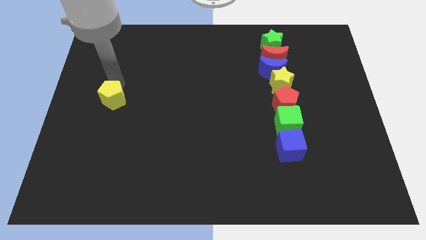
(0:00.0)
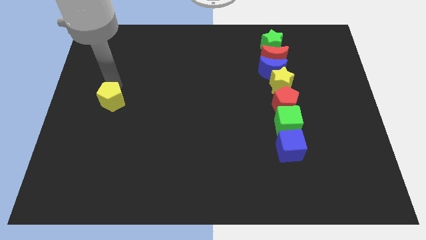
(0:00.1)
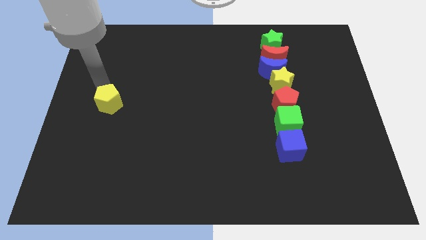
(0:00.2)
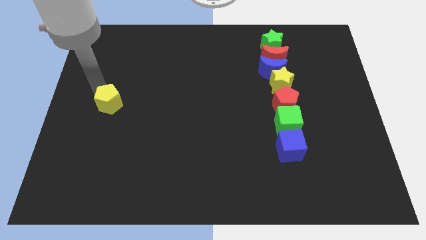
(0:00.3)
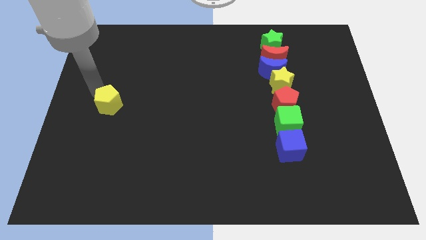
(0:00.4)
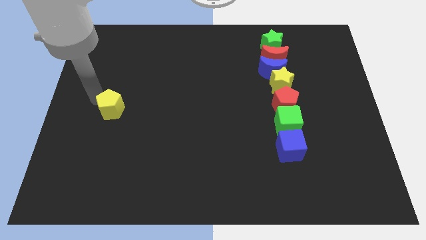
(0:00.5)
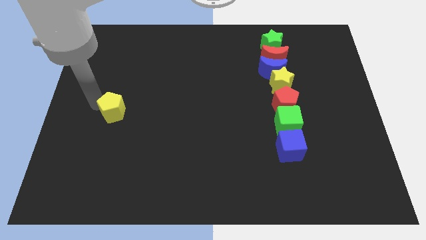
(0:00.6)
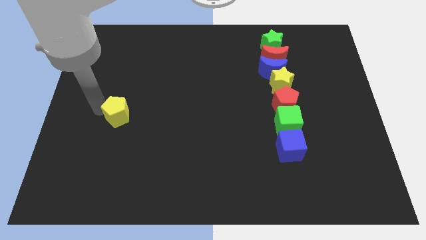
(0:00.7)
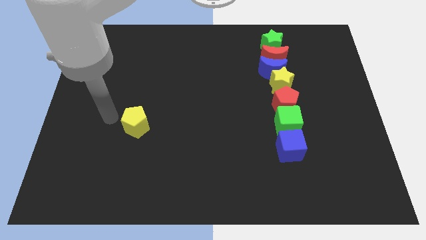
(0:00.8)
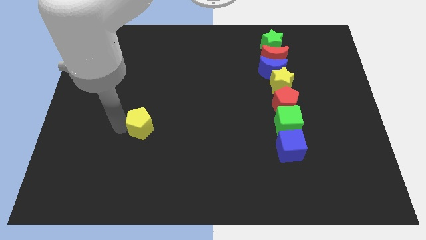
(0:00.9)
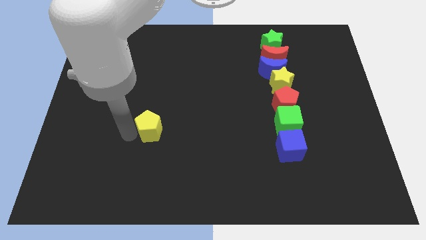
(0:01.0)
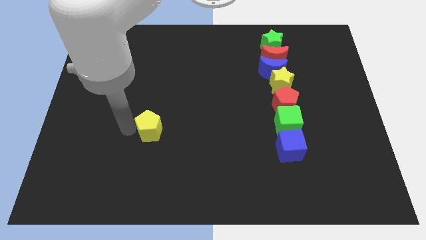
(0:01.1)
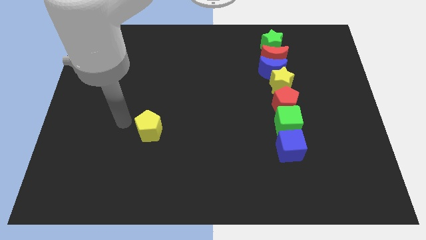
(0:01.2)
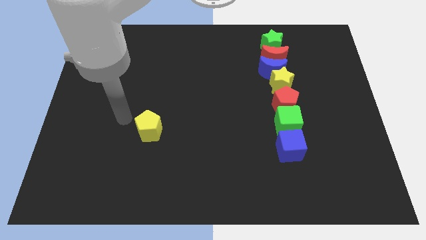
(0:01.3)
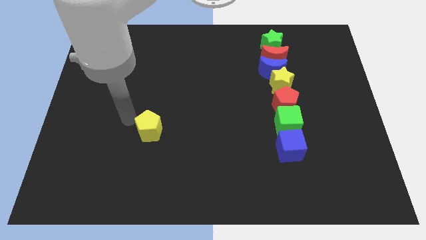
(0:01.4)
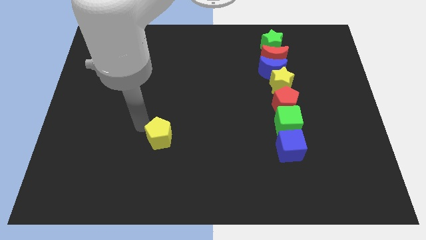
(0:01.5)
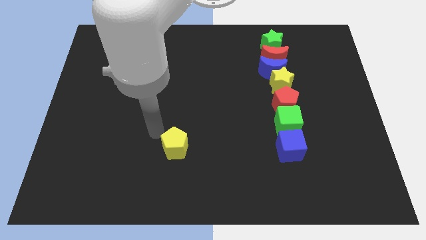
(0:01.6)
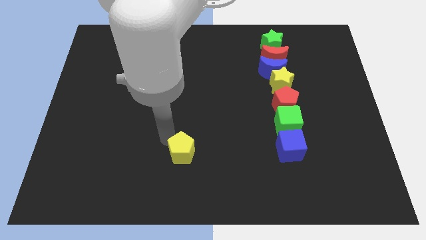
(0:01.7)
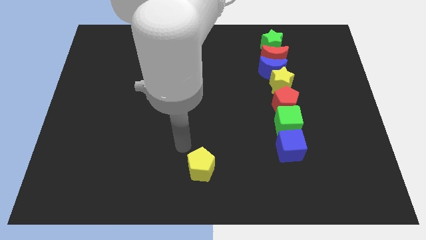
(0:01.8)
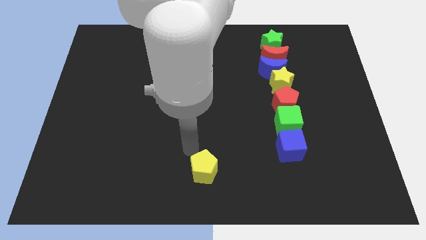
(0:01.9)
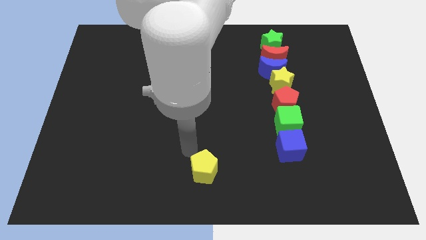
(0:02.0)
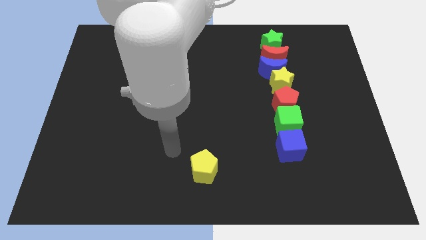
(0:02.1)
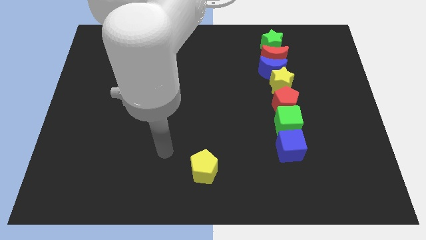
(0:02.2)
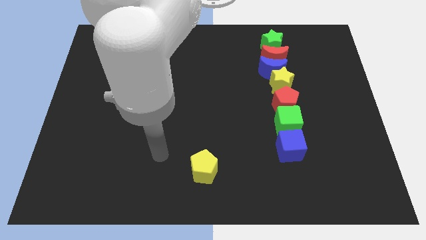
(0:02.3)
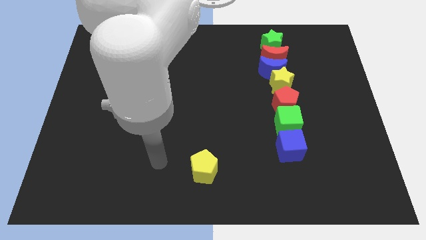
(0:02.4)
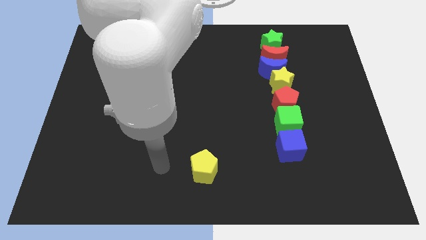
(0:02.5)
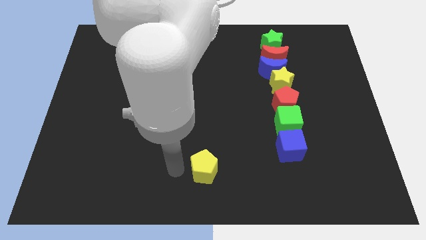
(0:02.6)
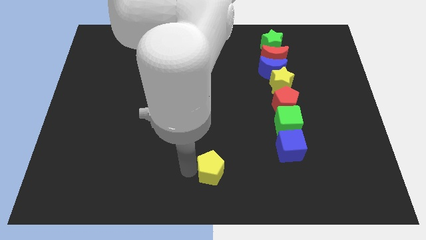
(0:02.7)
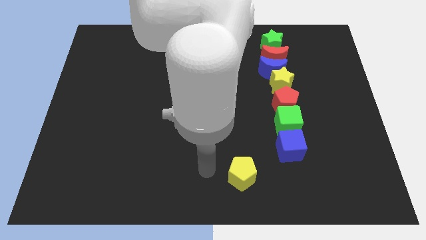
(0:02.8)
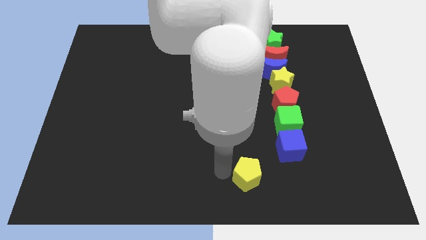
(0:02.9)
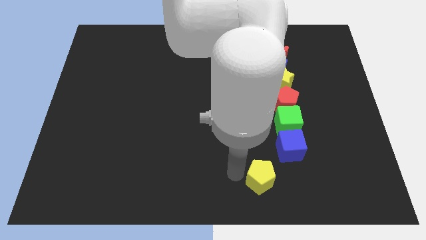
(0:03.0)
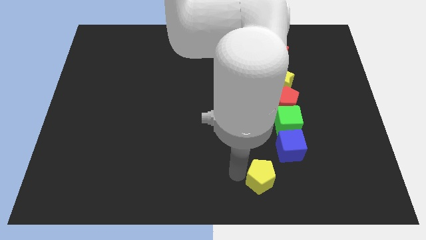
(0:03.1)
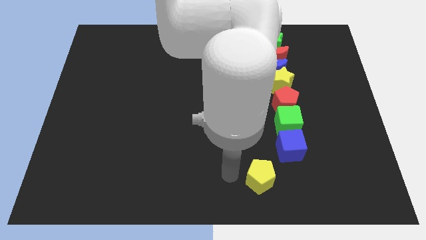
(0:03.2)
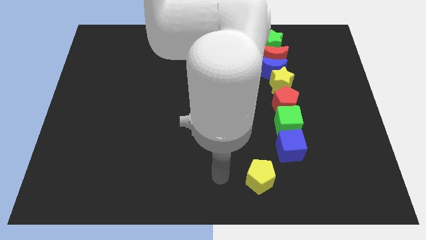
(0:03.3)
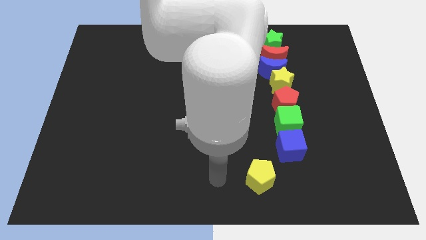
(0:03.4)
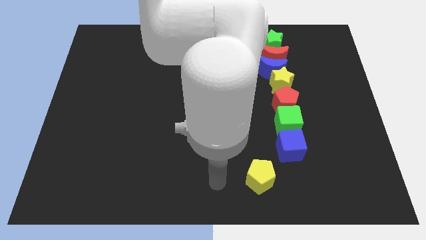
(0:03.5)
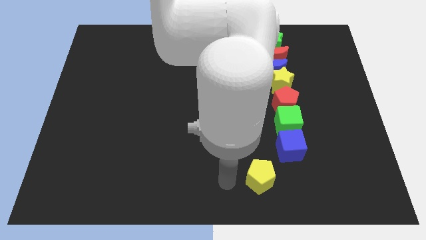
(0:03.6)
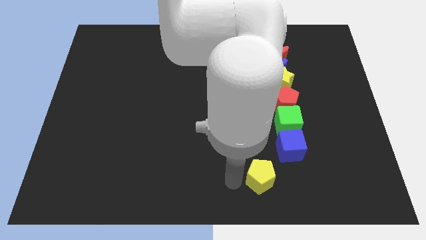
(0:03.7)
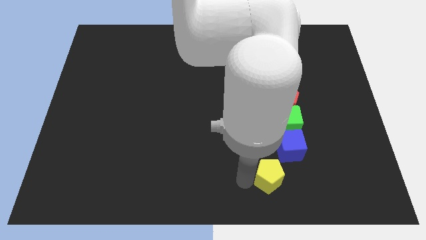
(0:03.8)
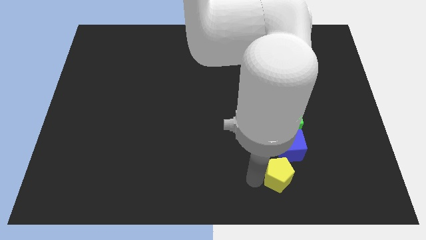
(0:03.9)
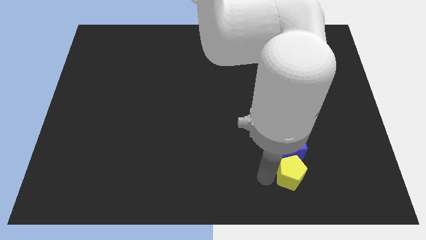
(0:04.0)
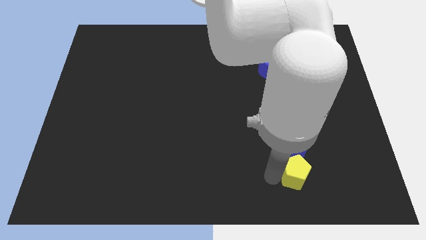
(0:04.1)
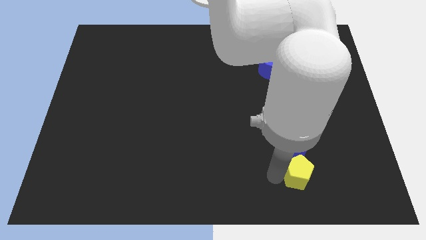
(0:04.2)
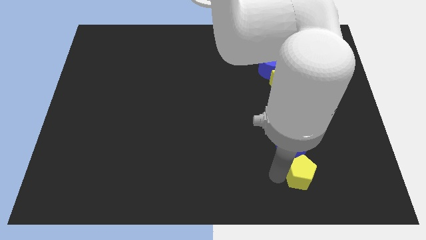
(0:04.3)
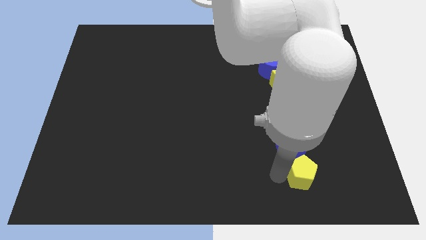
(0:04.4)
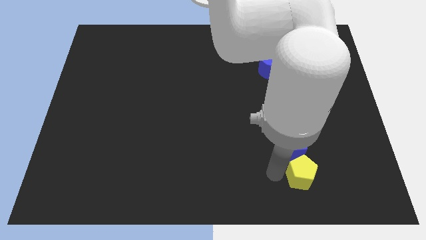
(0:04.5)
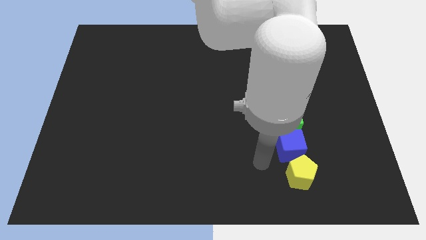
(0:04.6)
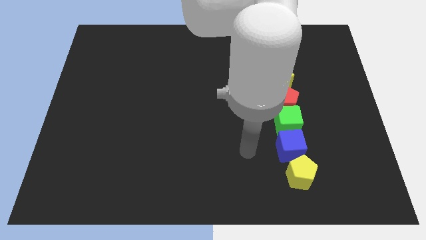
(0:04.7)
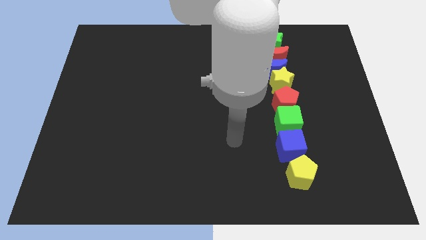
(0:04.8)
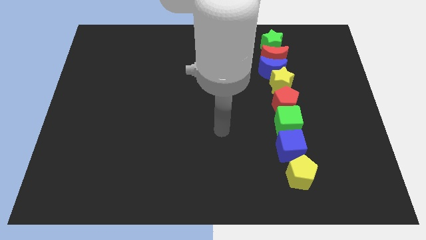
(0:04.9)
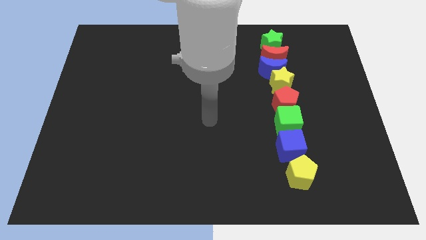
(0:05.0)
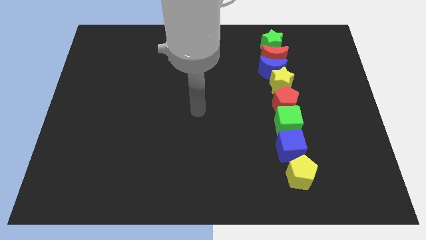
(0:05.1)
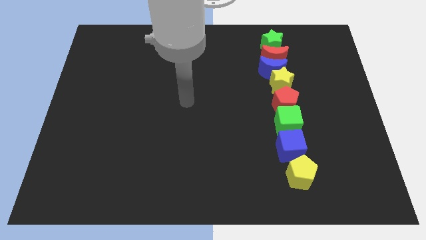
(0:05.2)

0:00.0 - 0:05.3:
place yellow pentagon below the blue cube

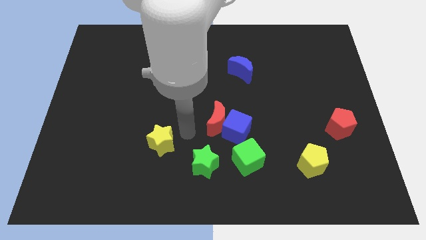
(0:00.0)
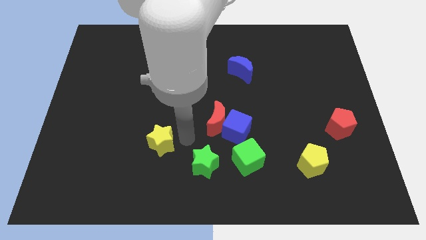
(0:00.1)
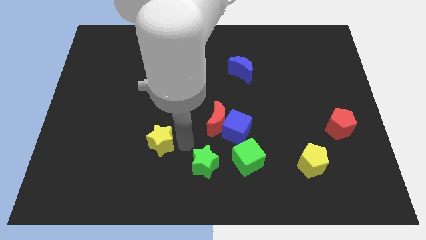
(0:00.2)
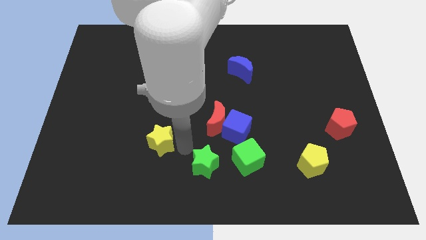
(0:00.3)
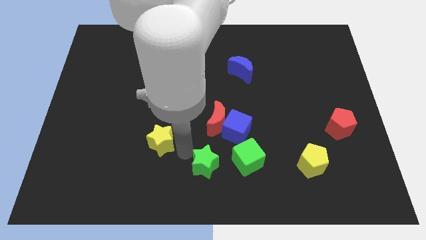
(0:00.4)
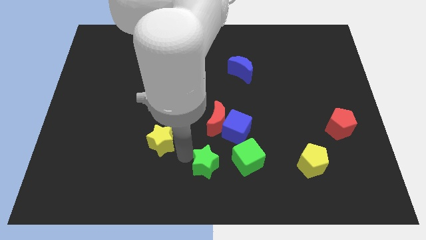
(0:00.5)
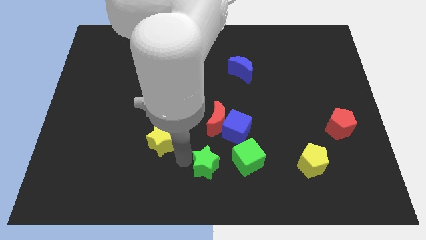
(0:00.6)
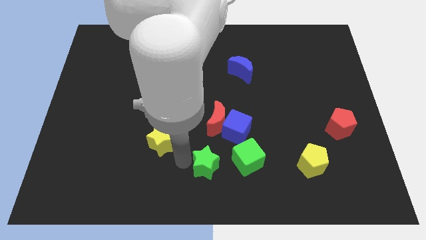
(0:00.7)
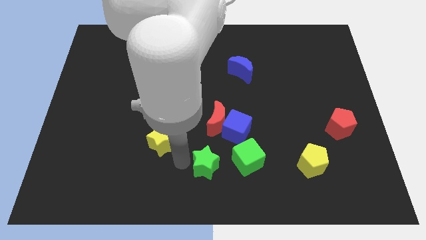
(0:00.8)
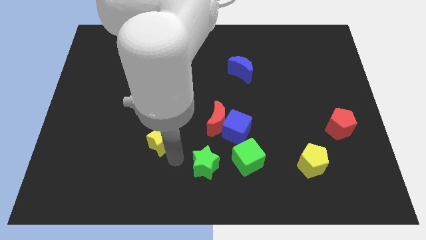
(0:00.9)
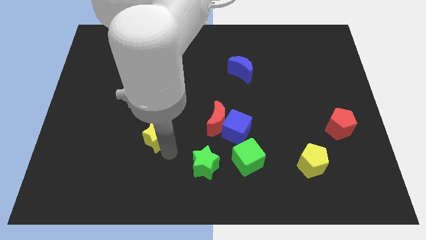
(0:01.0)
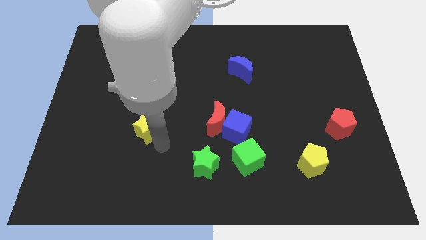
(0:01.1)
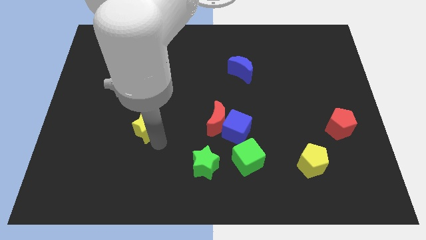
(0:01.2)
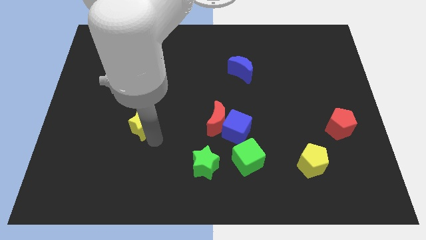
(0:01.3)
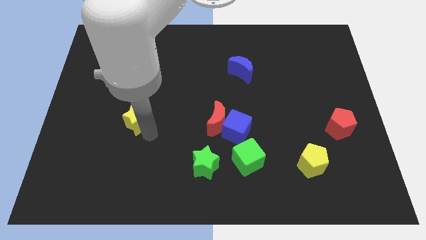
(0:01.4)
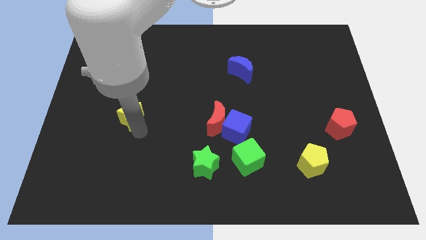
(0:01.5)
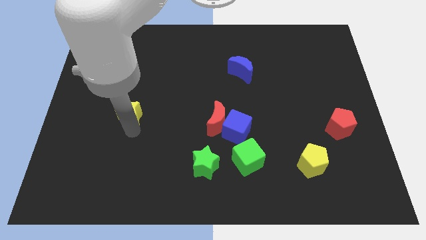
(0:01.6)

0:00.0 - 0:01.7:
slightly move the yellow star towards the center left

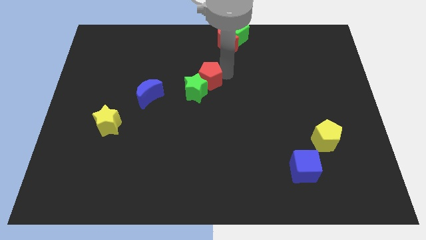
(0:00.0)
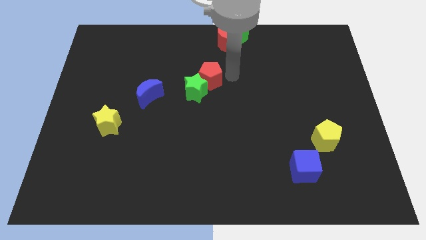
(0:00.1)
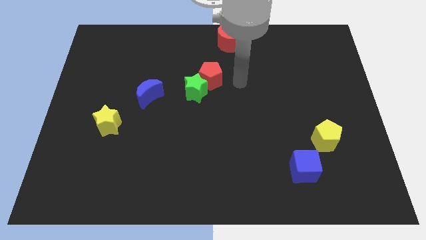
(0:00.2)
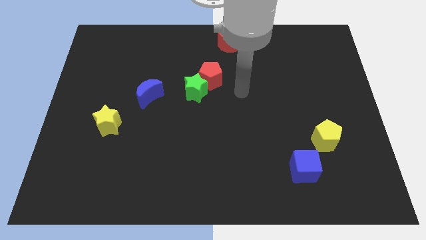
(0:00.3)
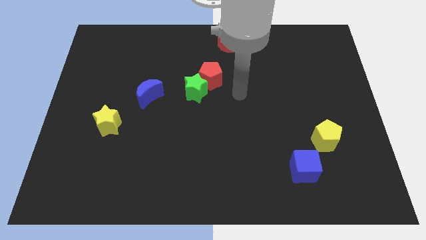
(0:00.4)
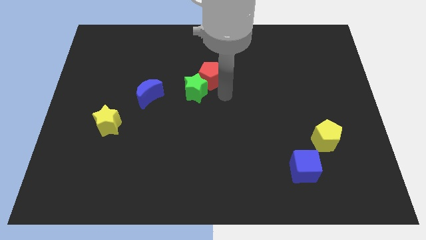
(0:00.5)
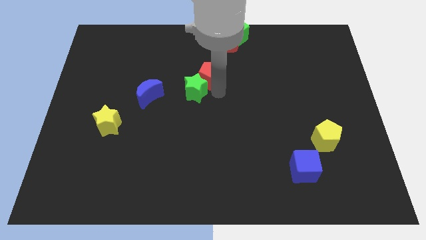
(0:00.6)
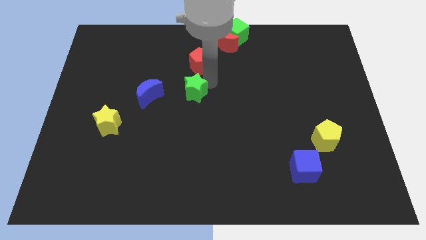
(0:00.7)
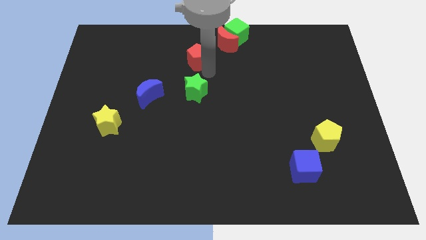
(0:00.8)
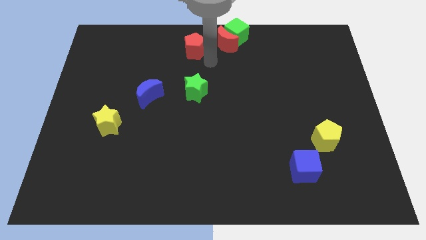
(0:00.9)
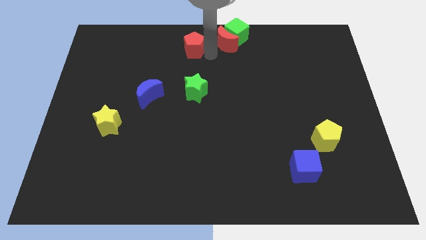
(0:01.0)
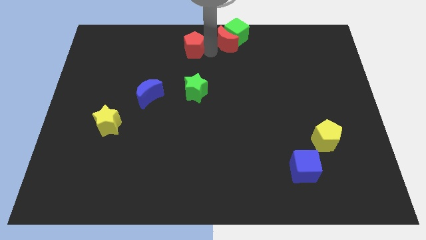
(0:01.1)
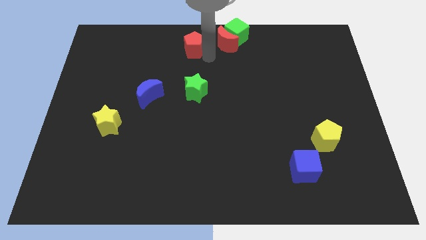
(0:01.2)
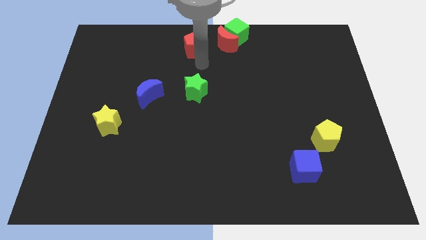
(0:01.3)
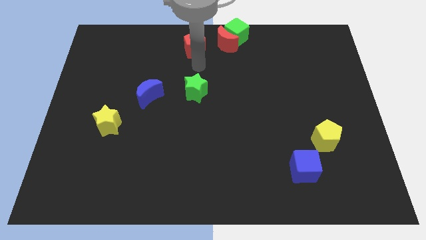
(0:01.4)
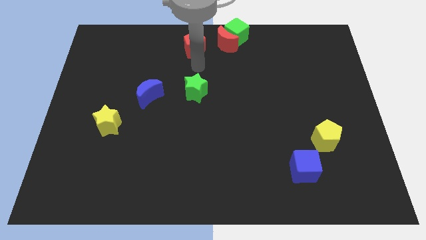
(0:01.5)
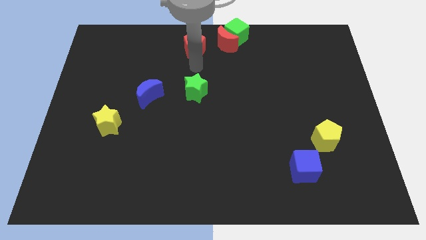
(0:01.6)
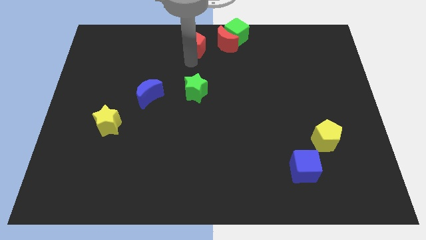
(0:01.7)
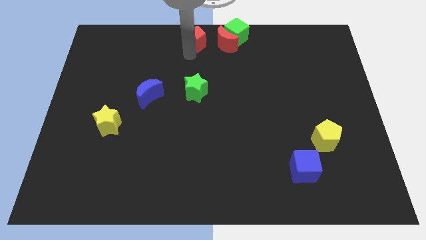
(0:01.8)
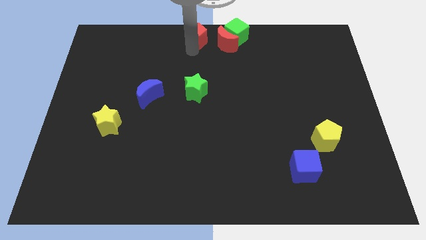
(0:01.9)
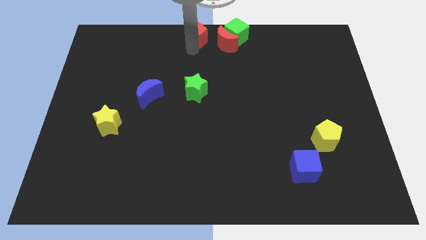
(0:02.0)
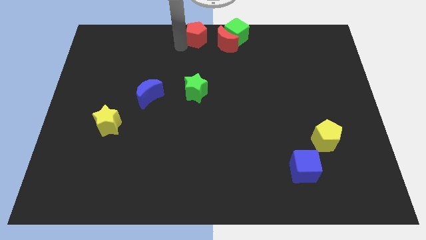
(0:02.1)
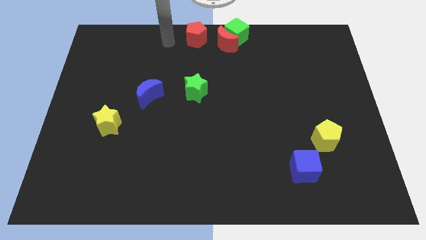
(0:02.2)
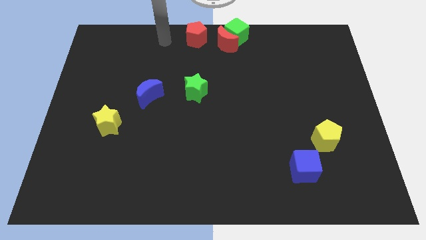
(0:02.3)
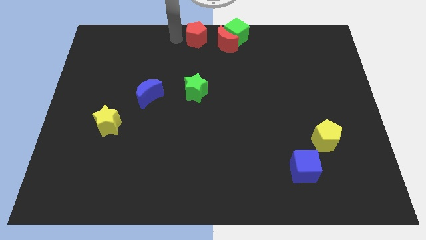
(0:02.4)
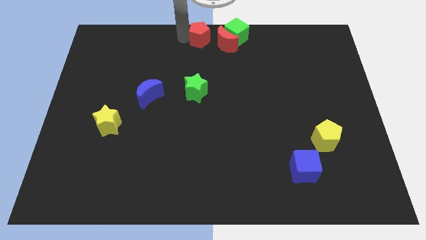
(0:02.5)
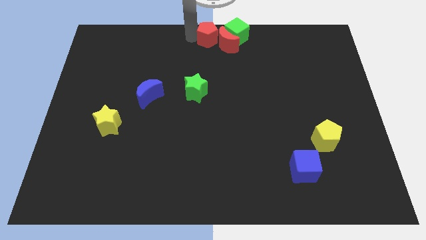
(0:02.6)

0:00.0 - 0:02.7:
place red pentagon left to red crescent
